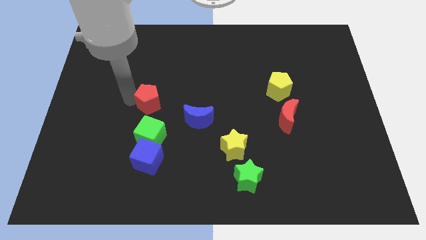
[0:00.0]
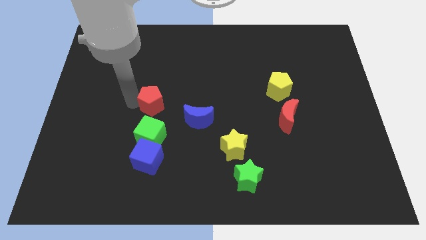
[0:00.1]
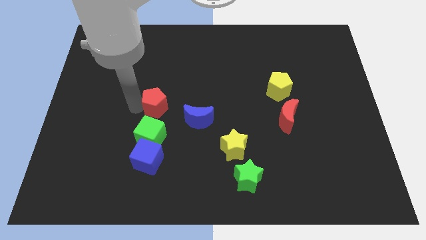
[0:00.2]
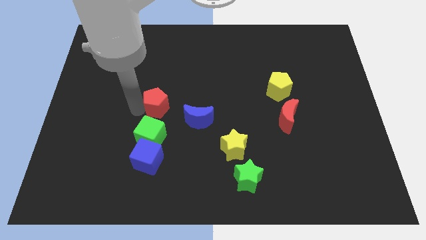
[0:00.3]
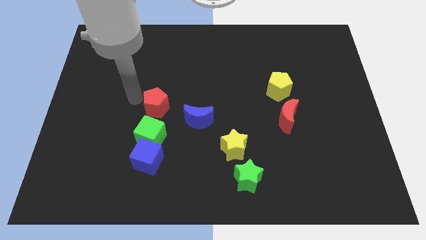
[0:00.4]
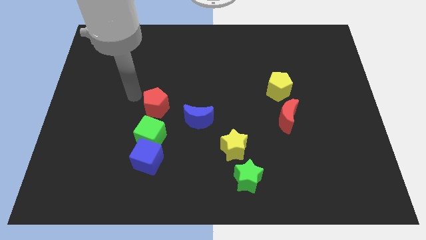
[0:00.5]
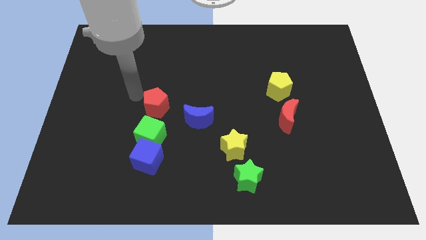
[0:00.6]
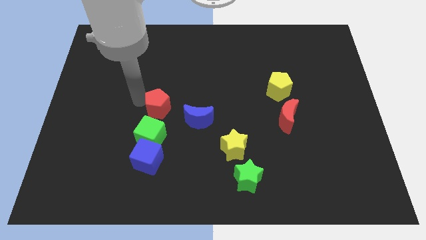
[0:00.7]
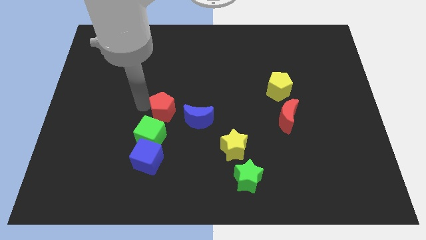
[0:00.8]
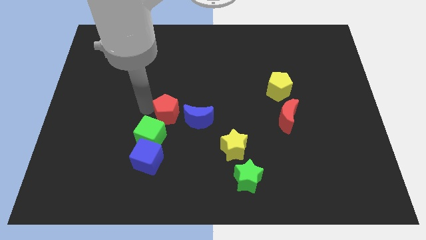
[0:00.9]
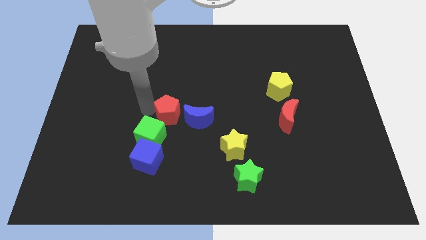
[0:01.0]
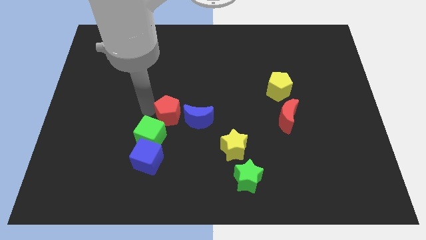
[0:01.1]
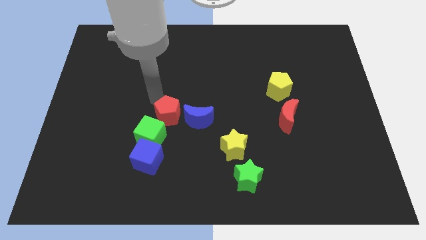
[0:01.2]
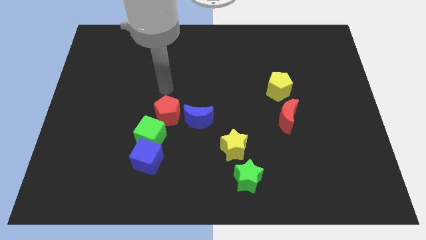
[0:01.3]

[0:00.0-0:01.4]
move the red pentagon slightly to the right

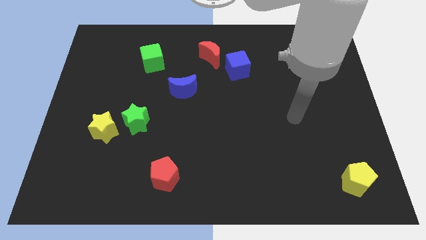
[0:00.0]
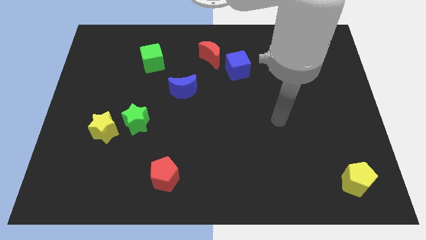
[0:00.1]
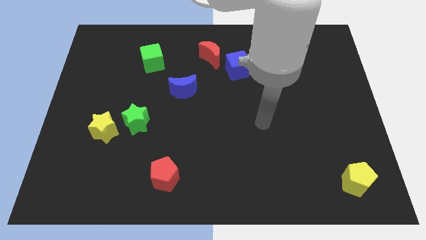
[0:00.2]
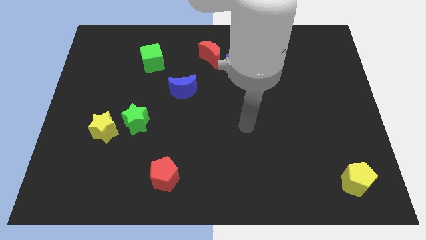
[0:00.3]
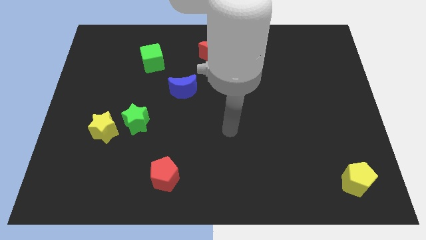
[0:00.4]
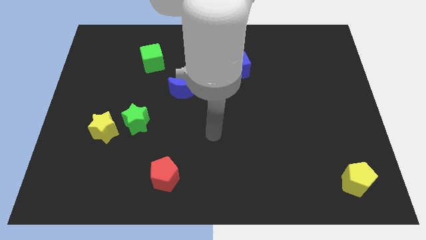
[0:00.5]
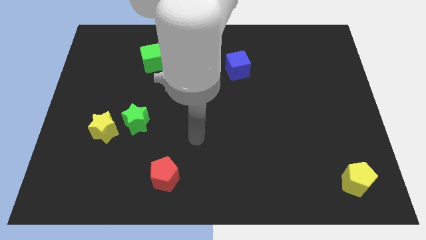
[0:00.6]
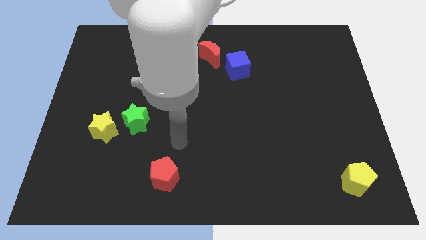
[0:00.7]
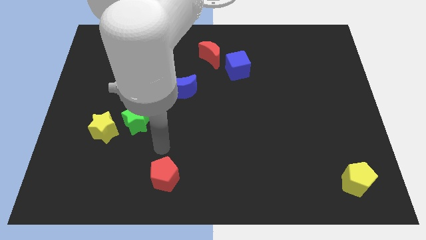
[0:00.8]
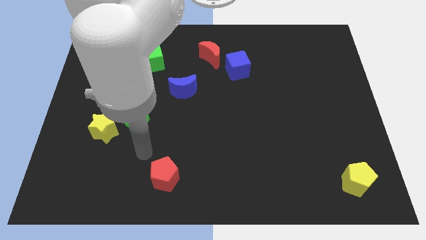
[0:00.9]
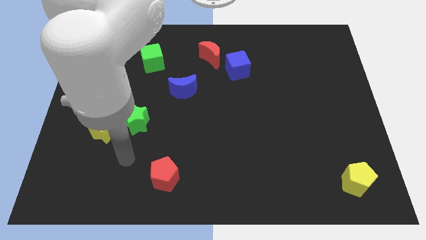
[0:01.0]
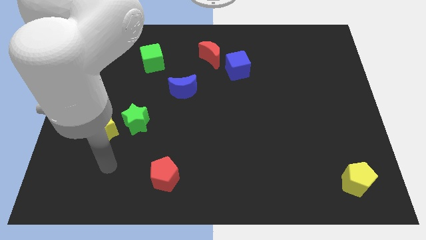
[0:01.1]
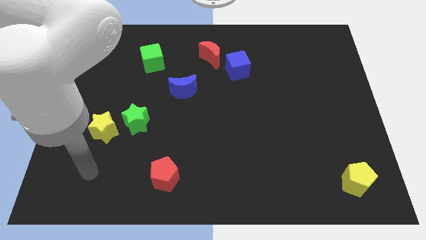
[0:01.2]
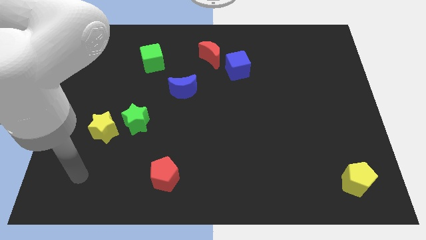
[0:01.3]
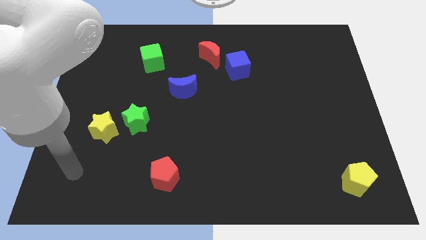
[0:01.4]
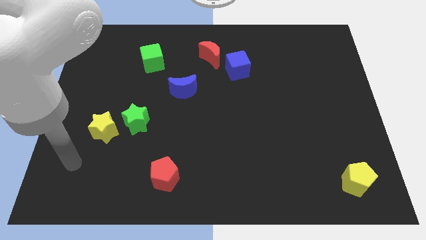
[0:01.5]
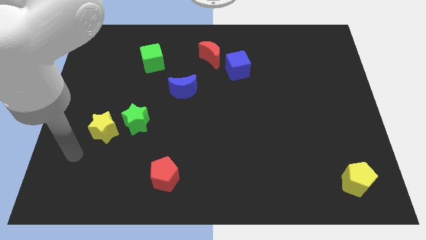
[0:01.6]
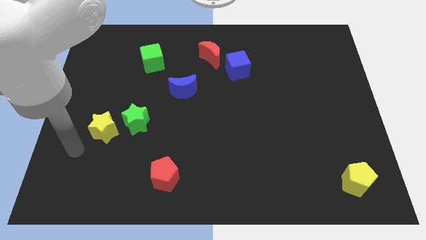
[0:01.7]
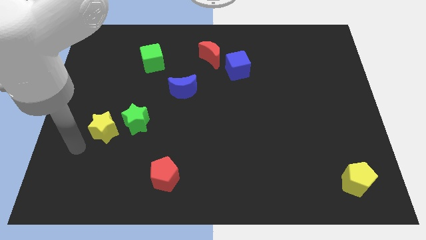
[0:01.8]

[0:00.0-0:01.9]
place your arm to the left of the yellow star

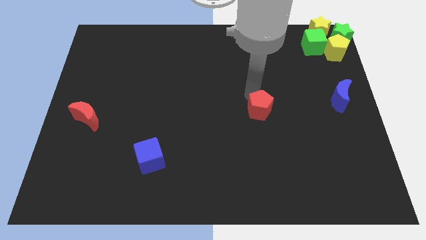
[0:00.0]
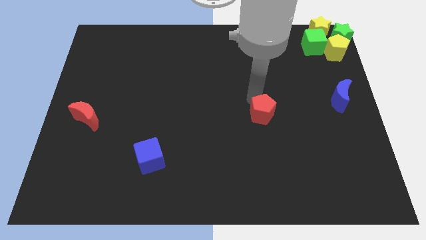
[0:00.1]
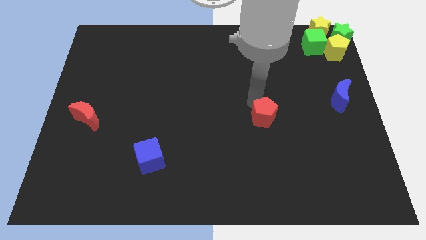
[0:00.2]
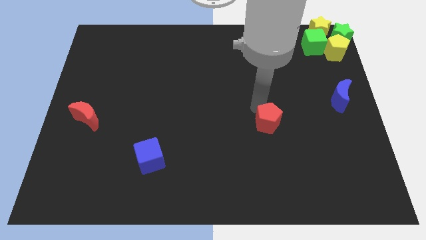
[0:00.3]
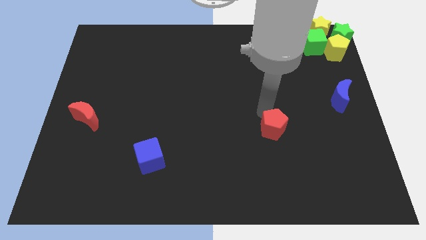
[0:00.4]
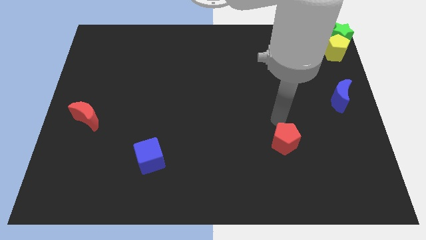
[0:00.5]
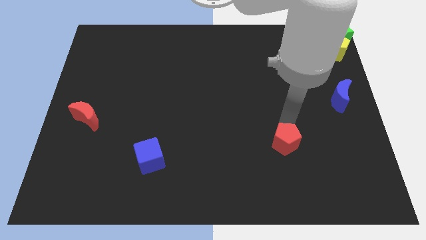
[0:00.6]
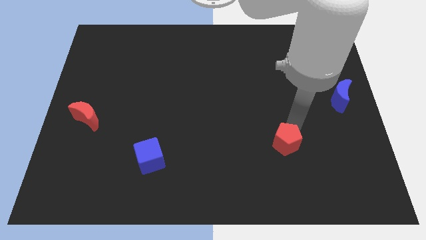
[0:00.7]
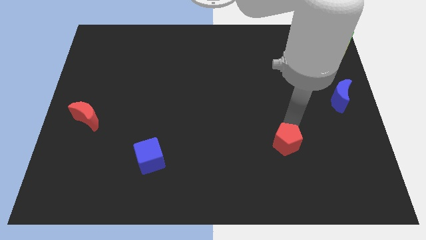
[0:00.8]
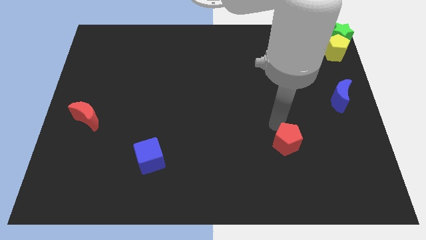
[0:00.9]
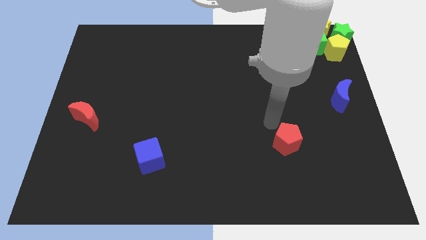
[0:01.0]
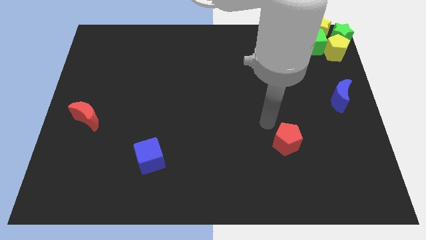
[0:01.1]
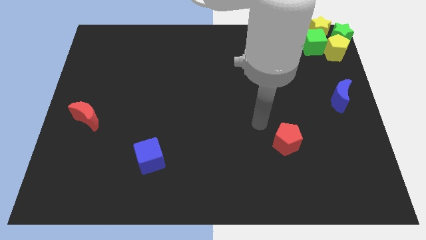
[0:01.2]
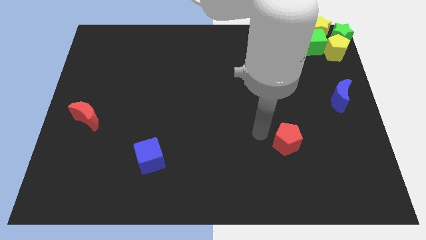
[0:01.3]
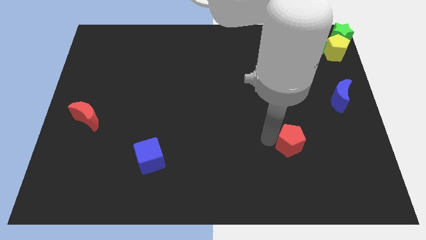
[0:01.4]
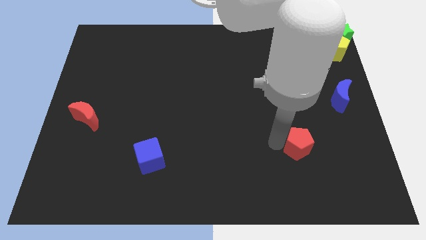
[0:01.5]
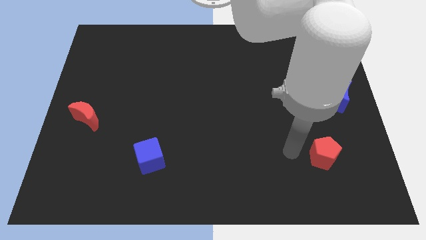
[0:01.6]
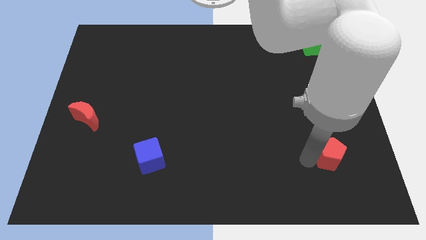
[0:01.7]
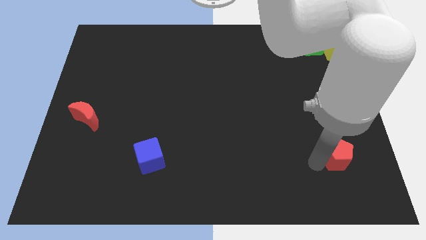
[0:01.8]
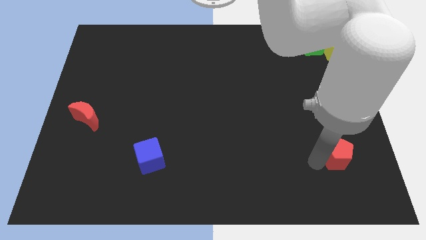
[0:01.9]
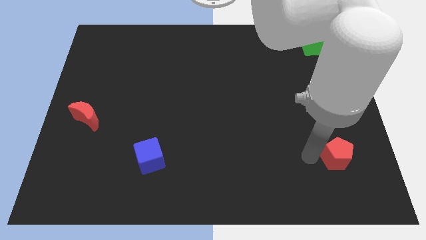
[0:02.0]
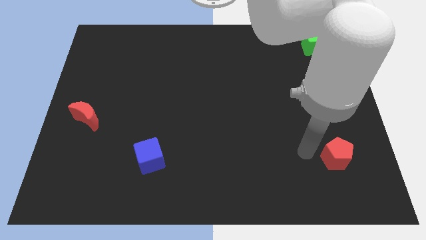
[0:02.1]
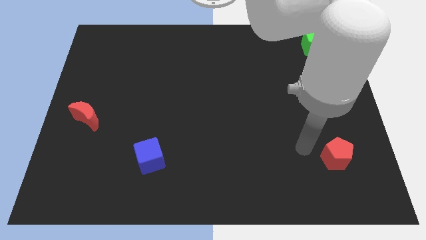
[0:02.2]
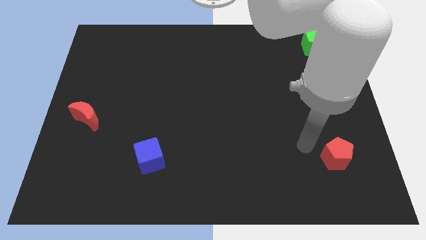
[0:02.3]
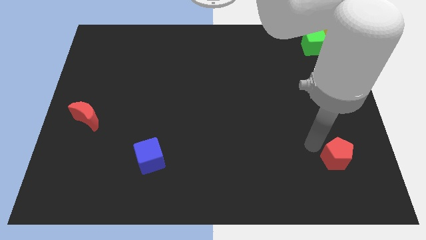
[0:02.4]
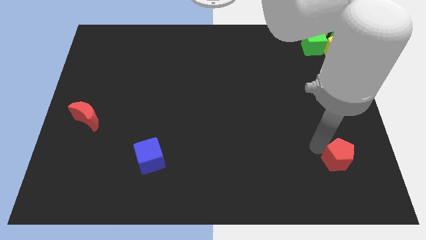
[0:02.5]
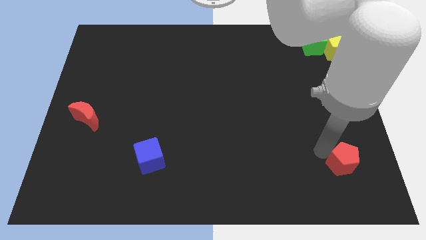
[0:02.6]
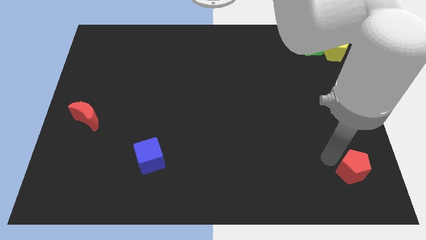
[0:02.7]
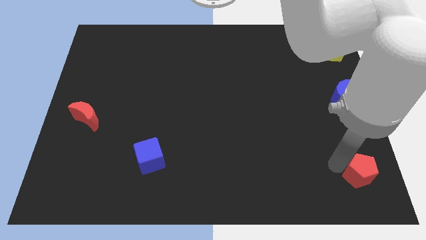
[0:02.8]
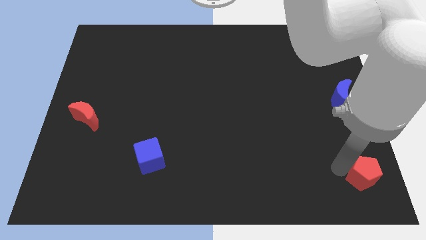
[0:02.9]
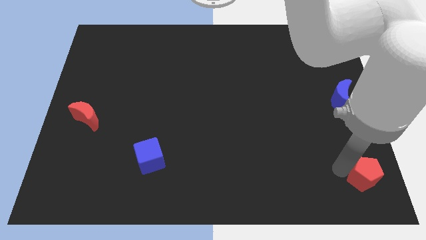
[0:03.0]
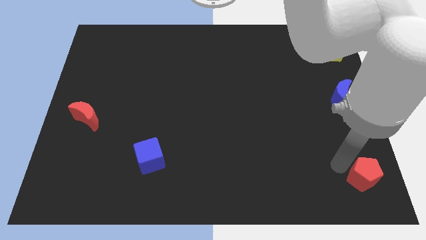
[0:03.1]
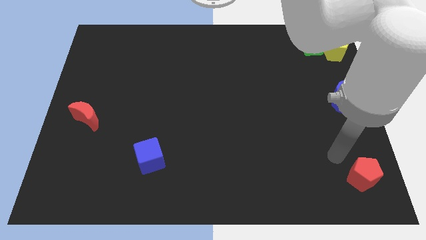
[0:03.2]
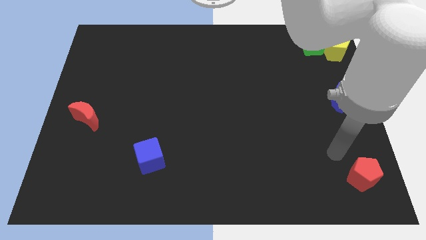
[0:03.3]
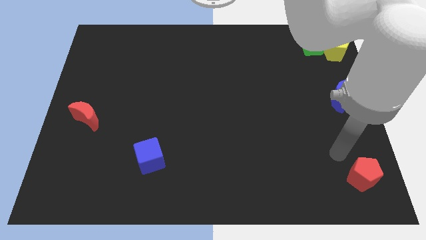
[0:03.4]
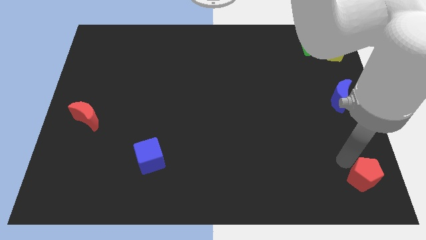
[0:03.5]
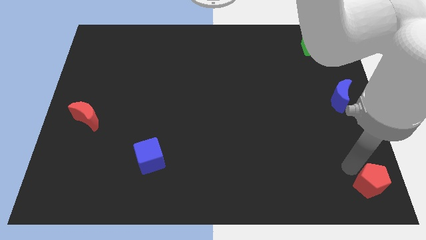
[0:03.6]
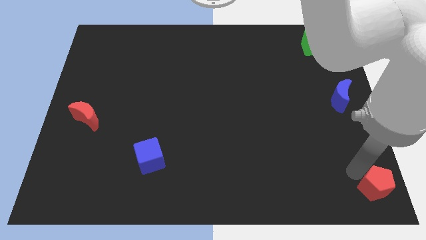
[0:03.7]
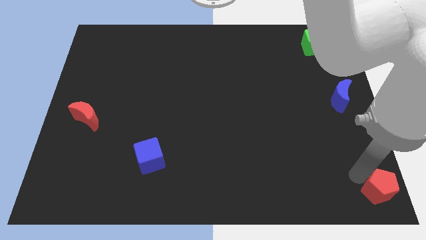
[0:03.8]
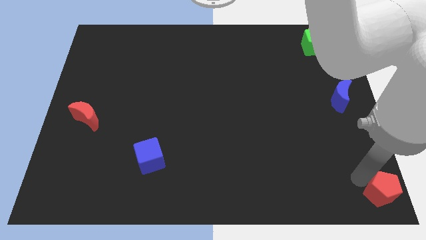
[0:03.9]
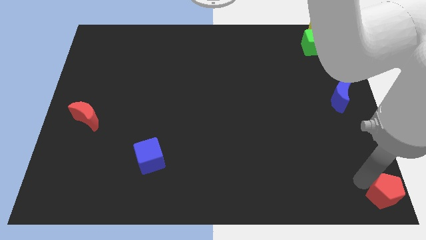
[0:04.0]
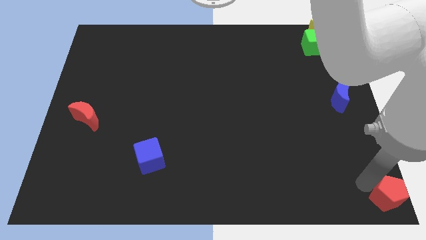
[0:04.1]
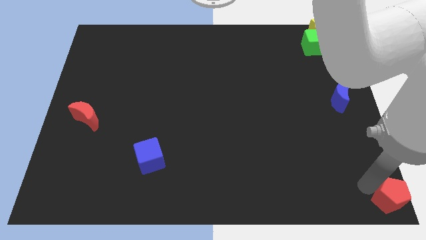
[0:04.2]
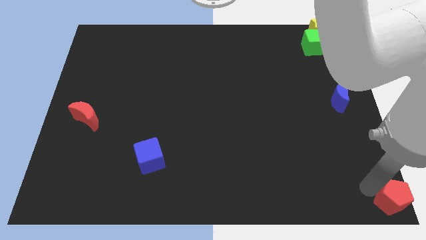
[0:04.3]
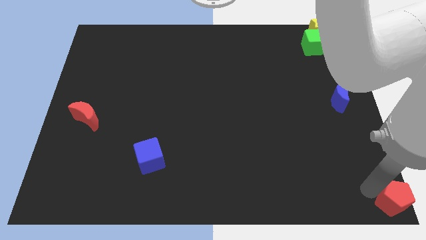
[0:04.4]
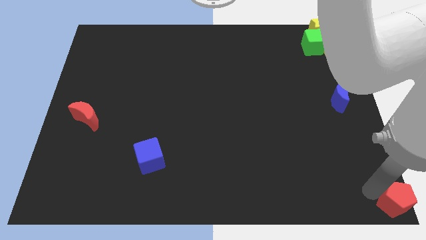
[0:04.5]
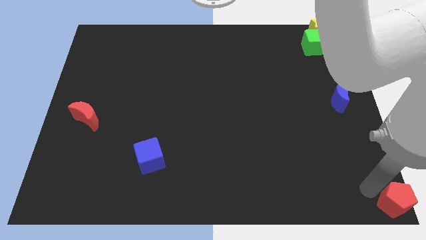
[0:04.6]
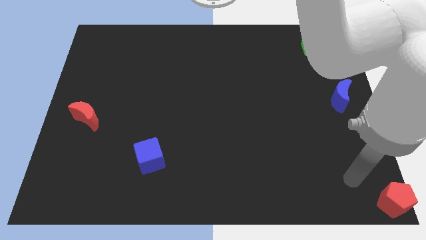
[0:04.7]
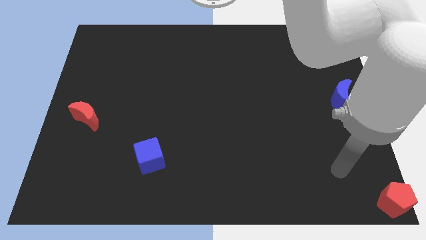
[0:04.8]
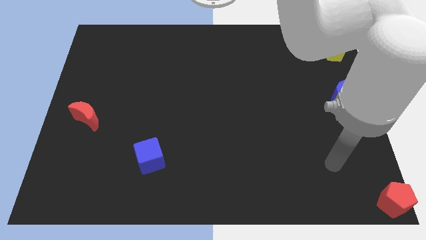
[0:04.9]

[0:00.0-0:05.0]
move the red pentagon to the bottom right corner of the board

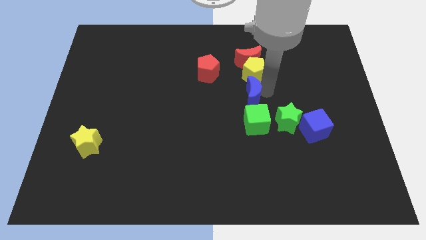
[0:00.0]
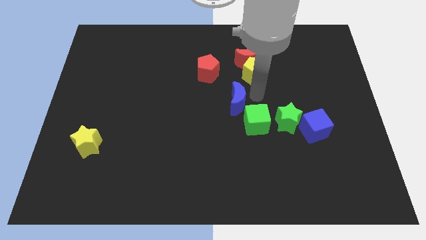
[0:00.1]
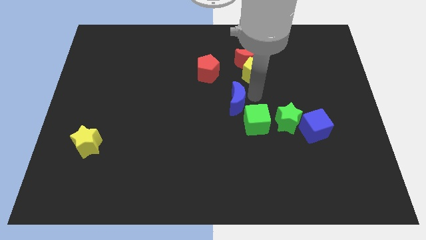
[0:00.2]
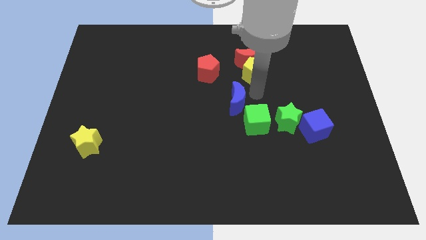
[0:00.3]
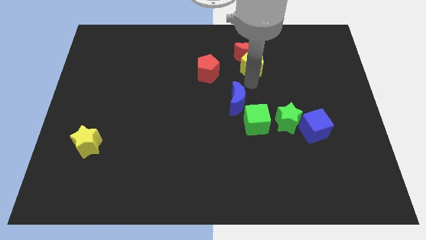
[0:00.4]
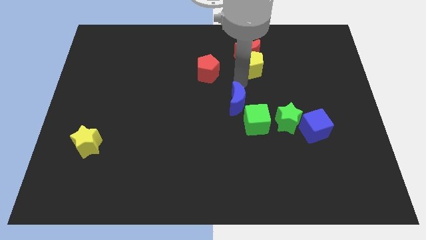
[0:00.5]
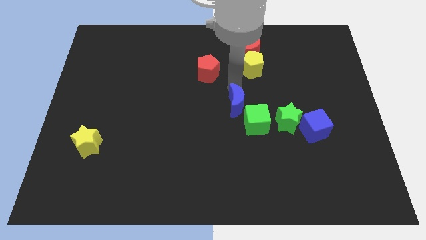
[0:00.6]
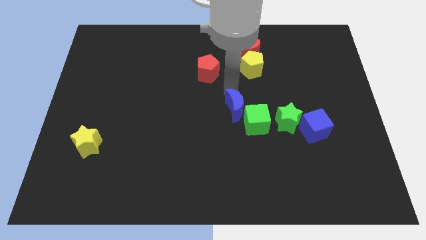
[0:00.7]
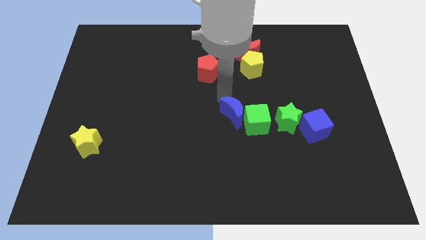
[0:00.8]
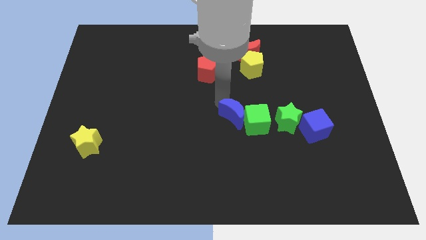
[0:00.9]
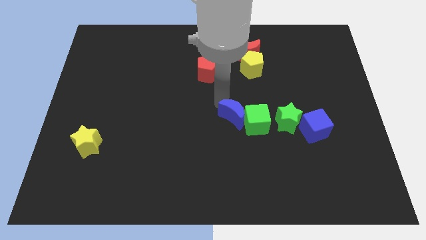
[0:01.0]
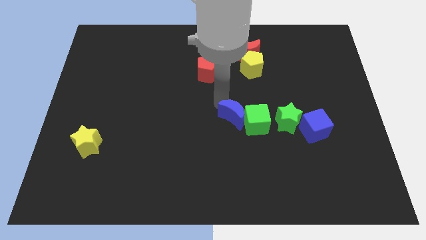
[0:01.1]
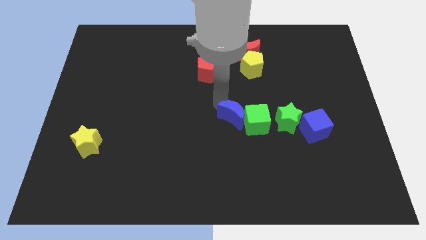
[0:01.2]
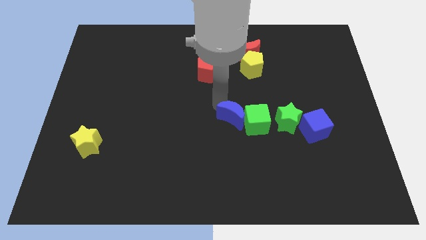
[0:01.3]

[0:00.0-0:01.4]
push the blue crescent to the left side of the green cube
